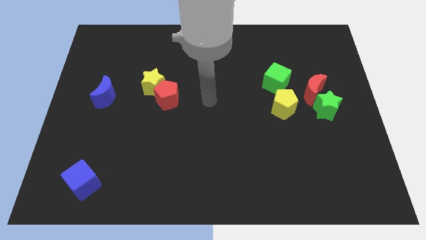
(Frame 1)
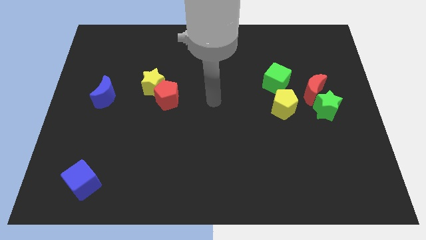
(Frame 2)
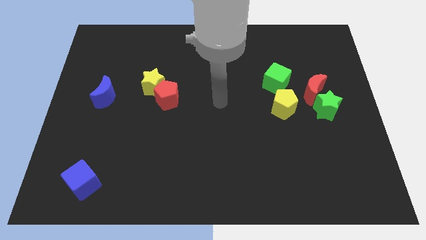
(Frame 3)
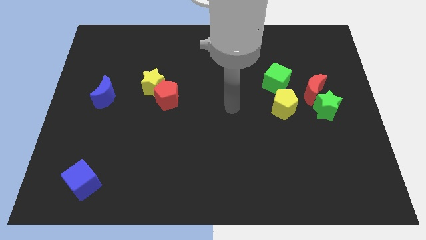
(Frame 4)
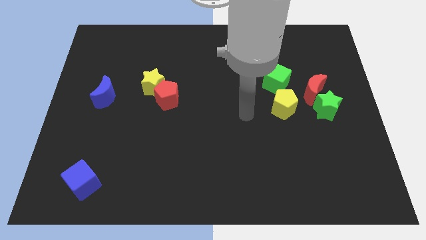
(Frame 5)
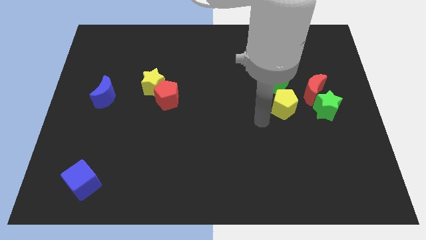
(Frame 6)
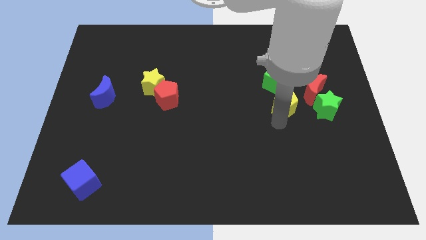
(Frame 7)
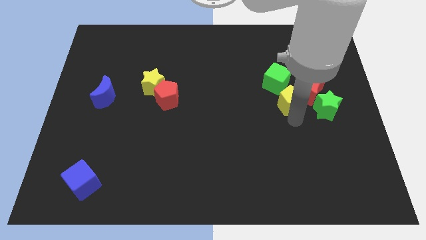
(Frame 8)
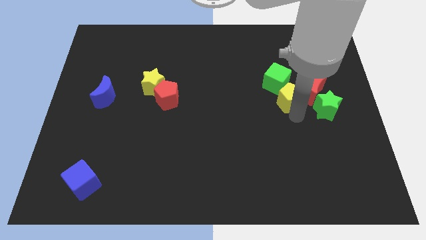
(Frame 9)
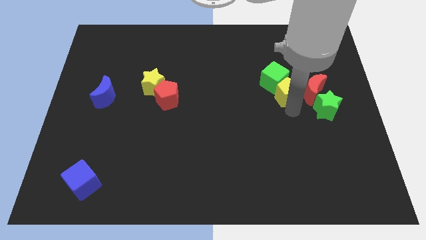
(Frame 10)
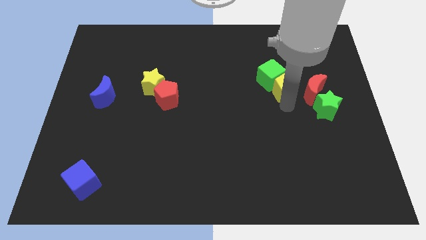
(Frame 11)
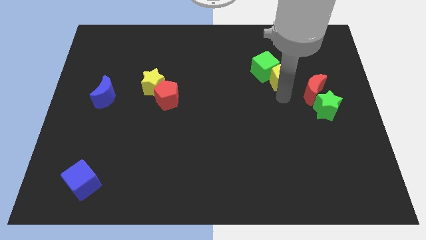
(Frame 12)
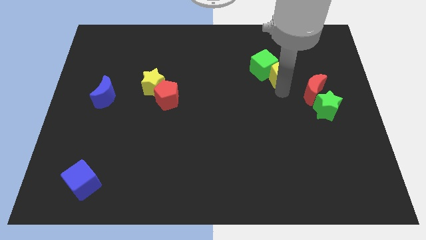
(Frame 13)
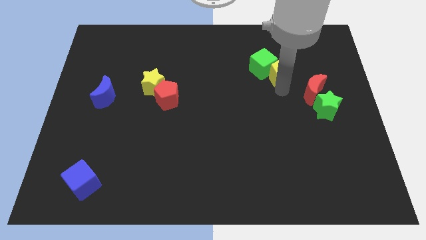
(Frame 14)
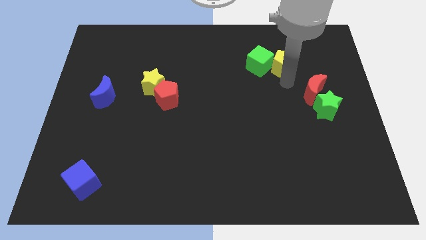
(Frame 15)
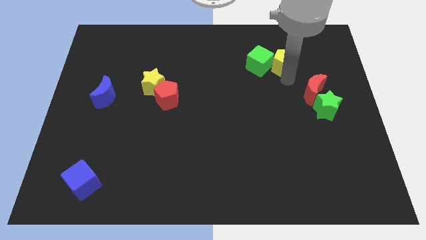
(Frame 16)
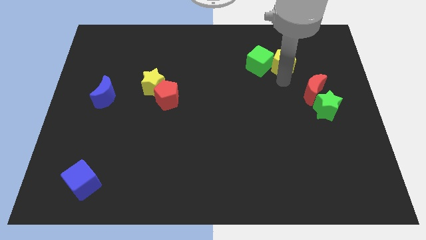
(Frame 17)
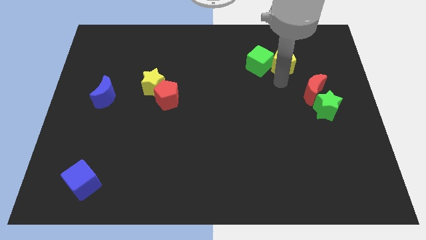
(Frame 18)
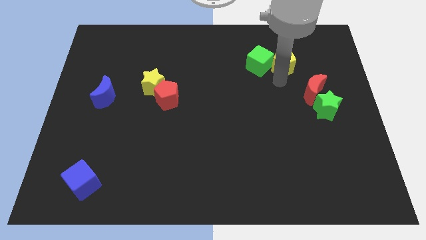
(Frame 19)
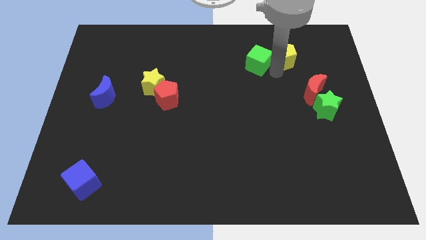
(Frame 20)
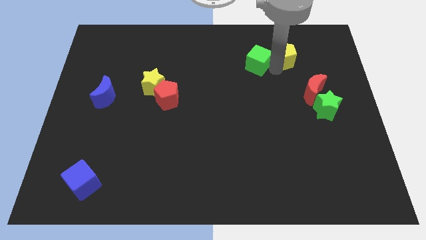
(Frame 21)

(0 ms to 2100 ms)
slightly move the yellow pentagon and green cube to the top side of the board

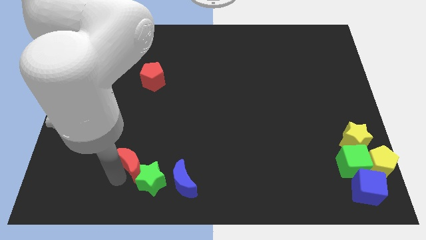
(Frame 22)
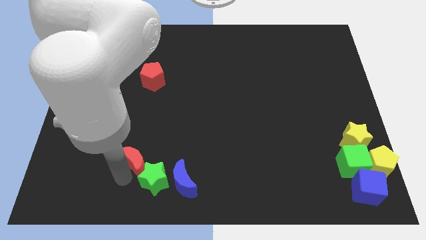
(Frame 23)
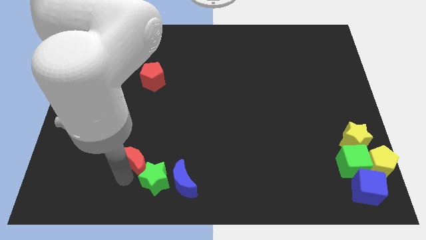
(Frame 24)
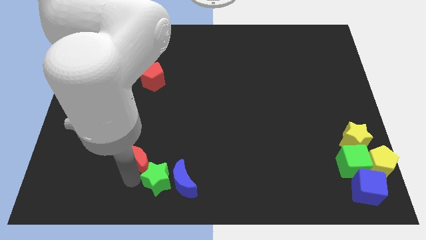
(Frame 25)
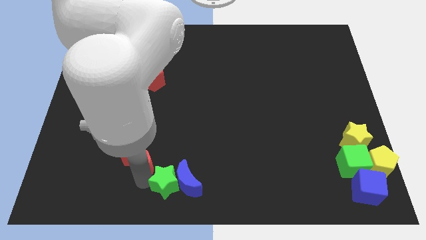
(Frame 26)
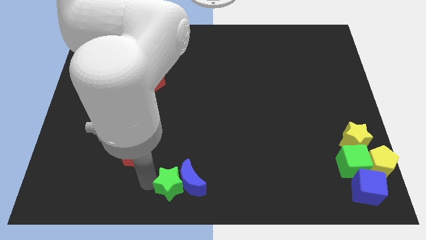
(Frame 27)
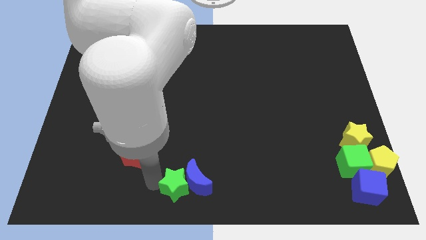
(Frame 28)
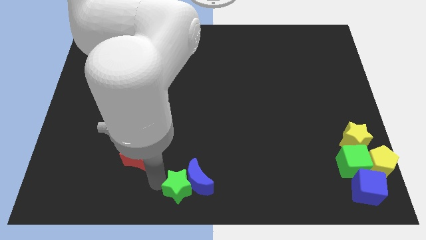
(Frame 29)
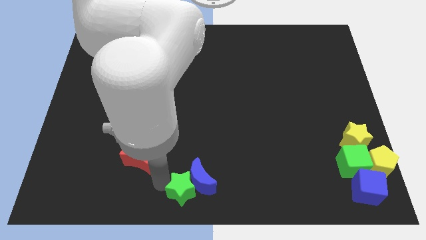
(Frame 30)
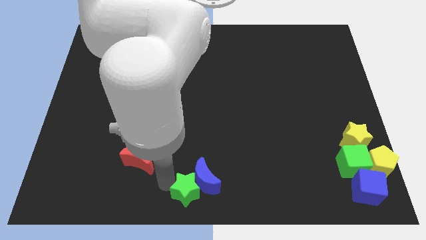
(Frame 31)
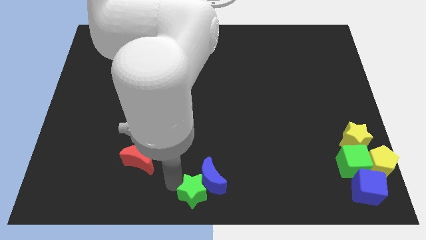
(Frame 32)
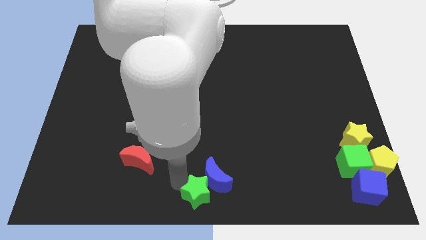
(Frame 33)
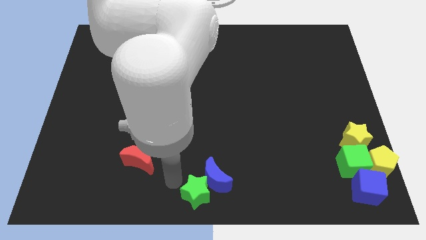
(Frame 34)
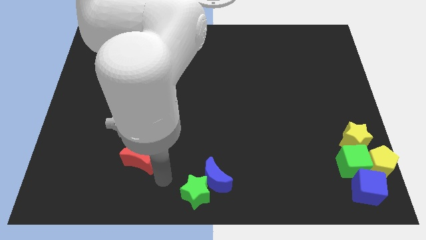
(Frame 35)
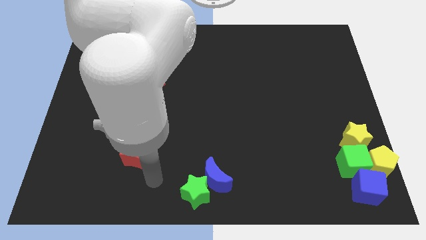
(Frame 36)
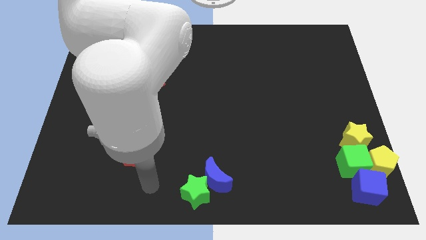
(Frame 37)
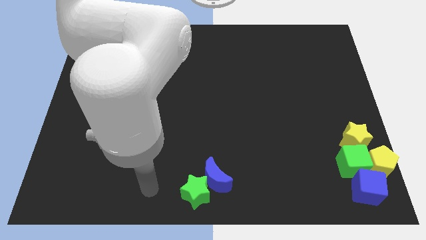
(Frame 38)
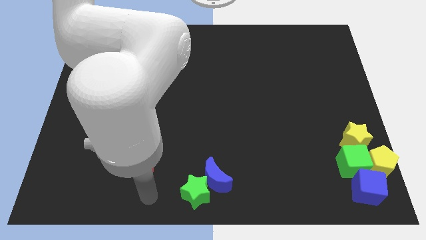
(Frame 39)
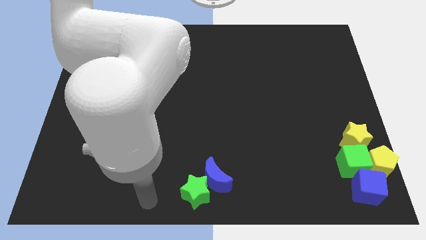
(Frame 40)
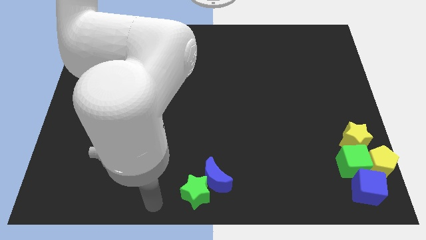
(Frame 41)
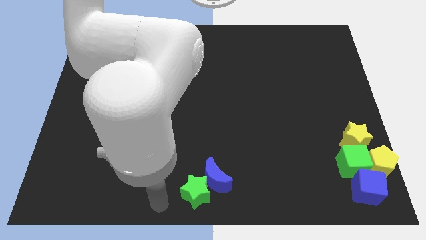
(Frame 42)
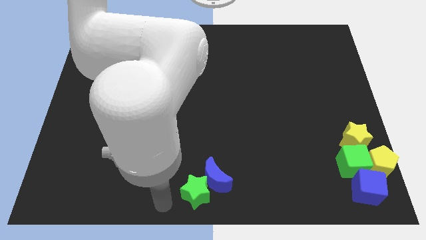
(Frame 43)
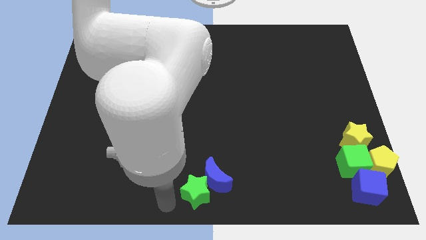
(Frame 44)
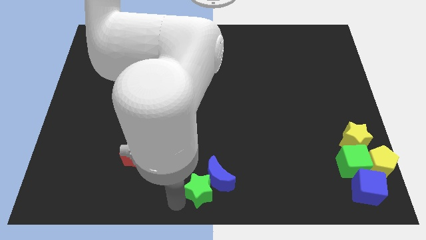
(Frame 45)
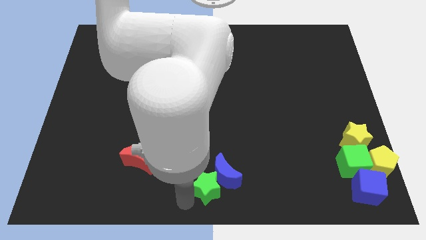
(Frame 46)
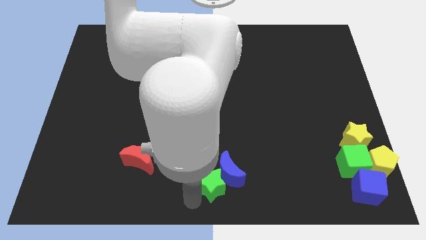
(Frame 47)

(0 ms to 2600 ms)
separate green star from red crescent

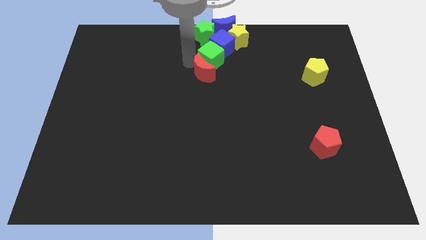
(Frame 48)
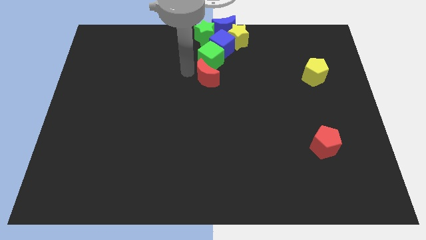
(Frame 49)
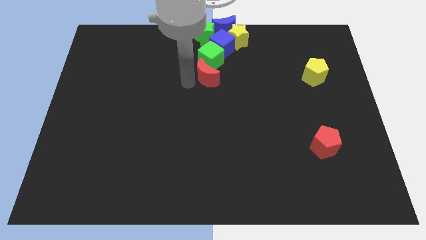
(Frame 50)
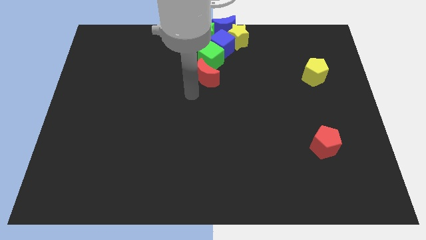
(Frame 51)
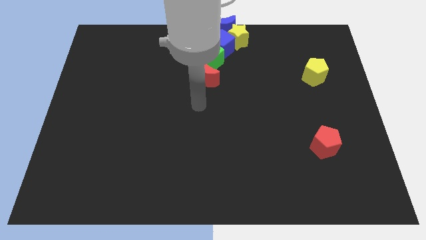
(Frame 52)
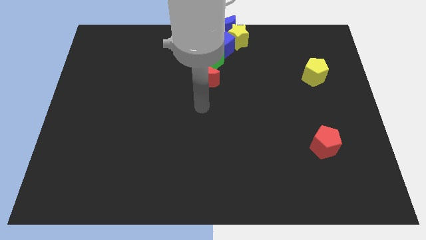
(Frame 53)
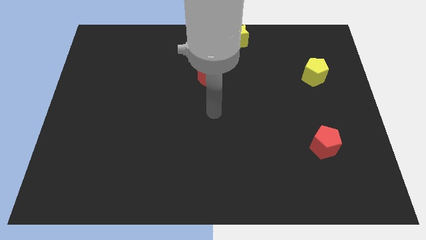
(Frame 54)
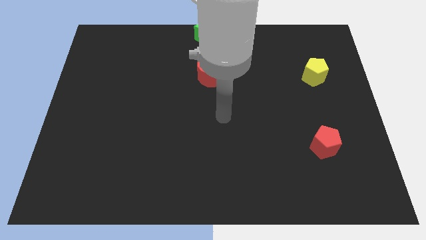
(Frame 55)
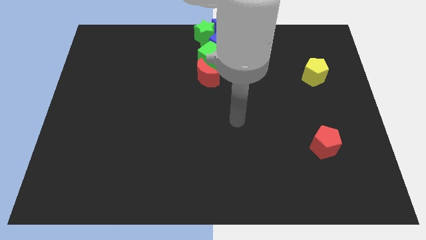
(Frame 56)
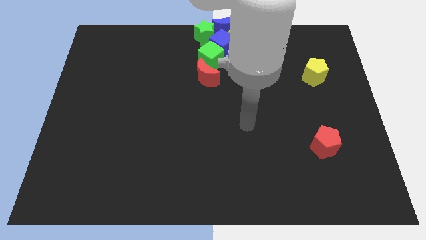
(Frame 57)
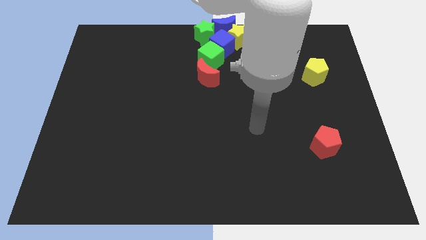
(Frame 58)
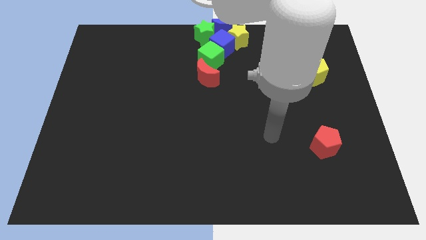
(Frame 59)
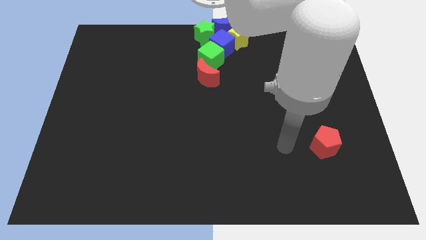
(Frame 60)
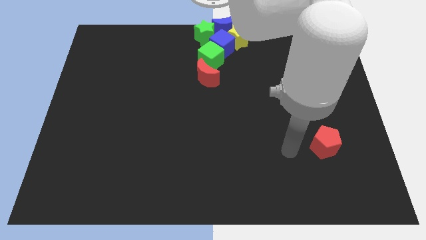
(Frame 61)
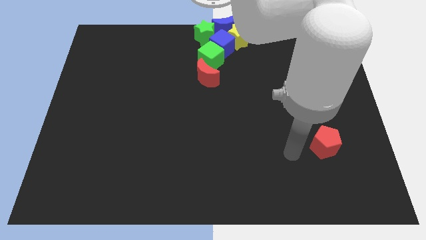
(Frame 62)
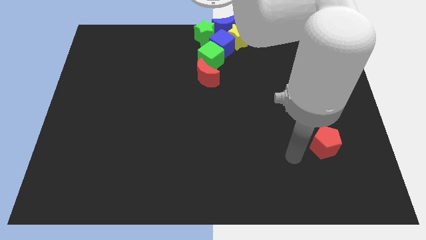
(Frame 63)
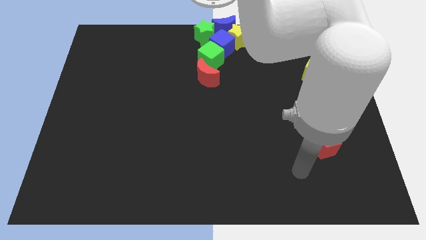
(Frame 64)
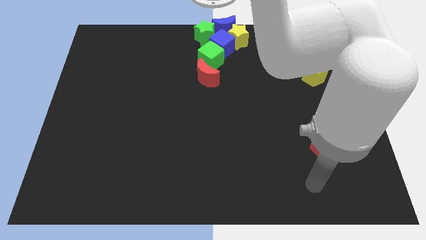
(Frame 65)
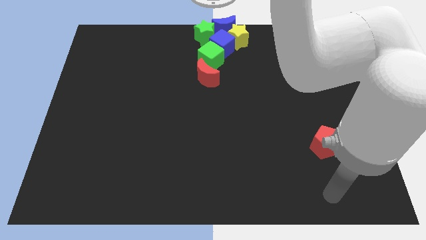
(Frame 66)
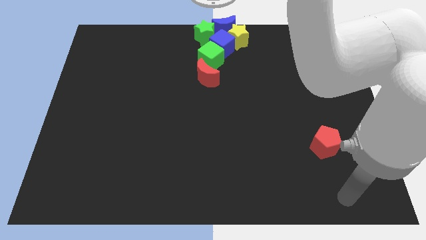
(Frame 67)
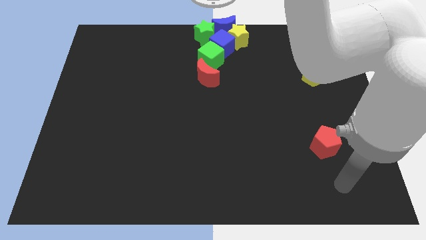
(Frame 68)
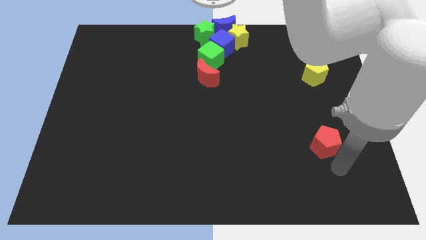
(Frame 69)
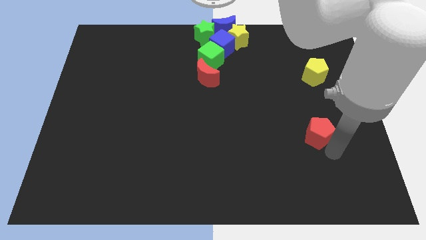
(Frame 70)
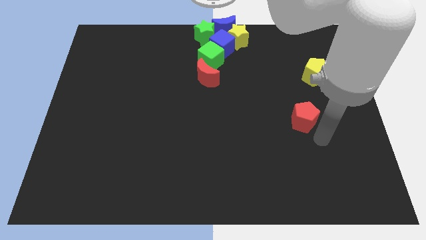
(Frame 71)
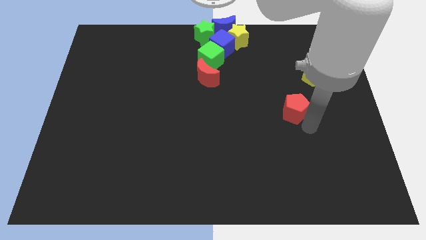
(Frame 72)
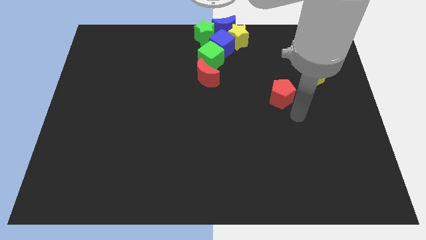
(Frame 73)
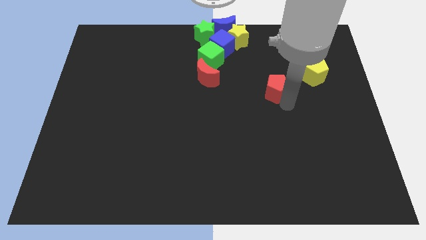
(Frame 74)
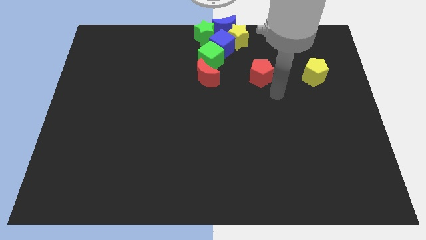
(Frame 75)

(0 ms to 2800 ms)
move your arm towards the red pentagon on right bottom of the board

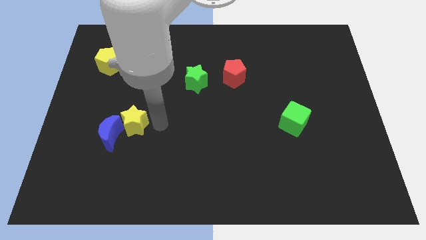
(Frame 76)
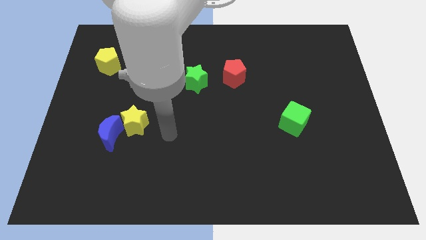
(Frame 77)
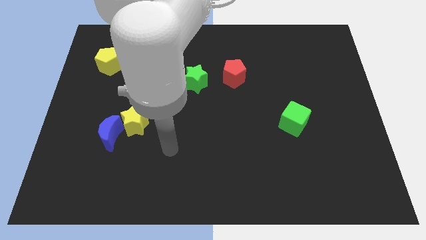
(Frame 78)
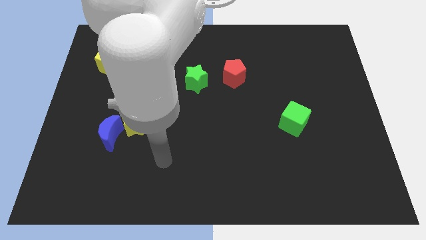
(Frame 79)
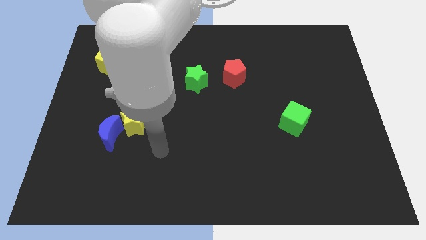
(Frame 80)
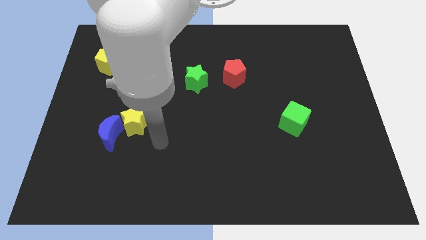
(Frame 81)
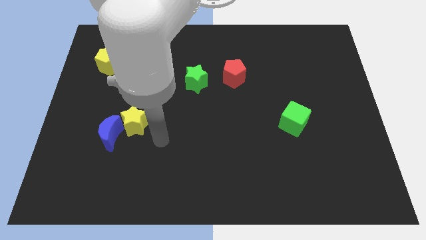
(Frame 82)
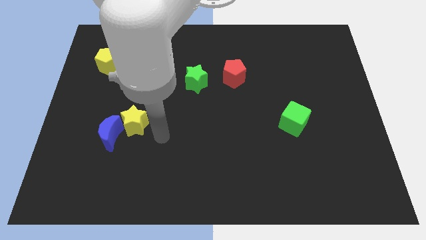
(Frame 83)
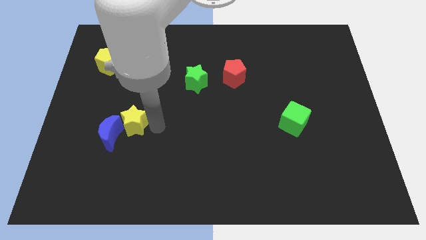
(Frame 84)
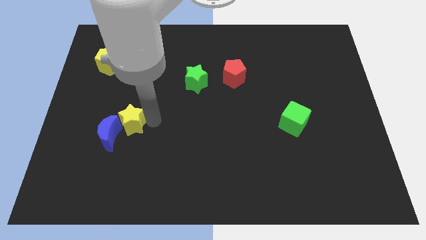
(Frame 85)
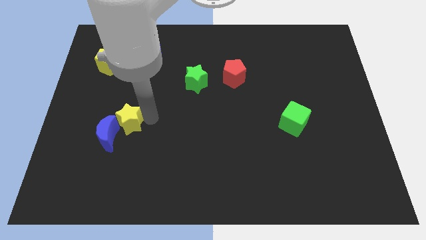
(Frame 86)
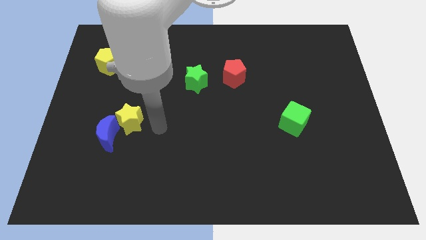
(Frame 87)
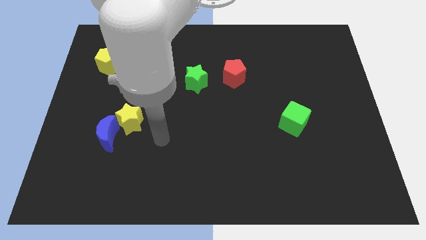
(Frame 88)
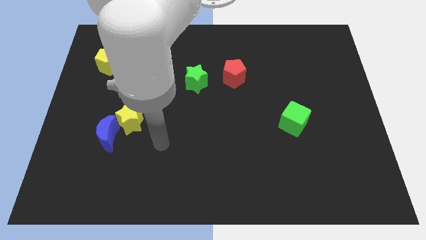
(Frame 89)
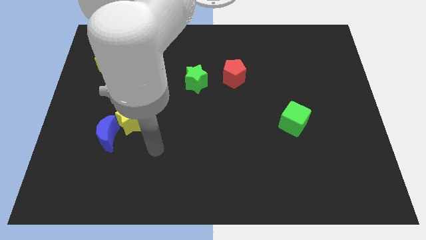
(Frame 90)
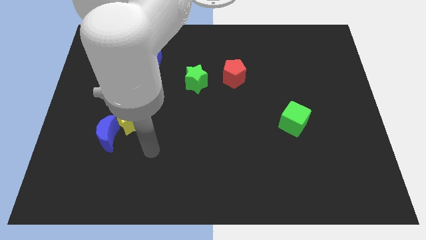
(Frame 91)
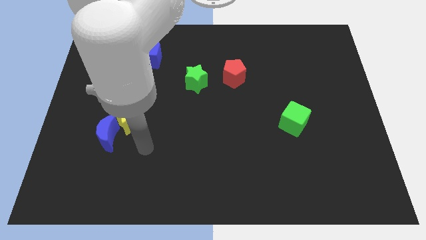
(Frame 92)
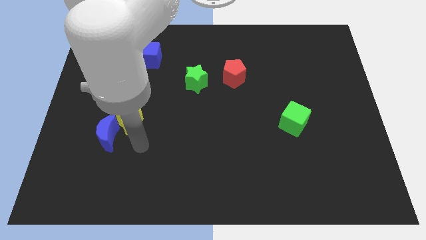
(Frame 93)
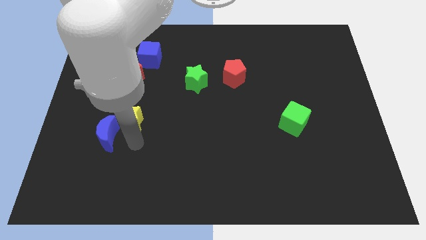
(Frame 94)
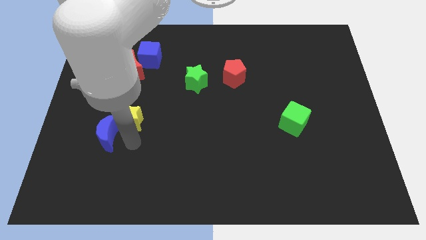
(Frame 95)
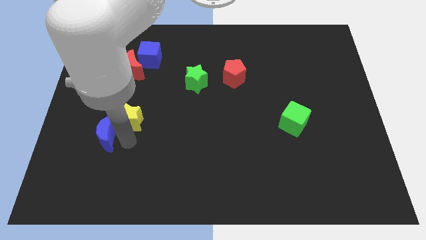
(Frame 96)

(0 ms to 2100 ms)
slightly move the yellow star to the top
